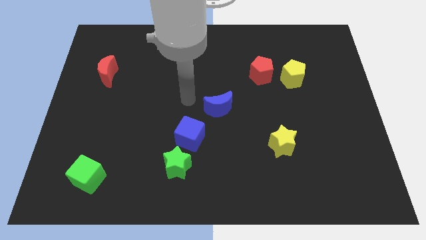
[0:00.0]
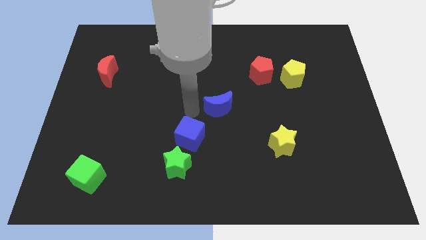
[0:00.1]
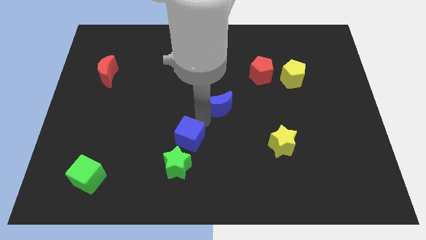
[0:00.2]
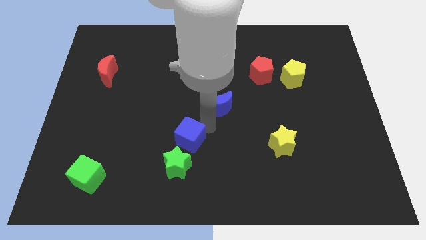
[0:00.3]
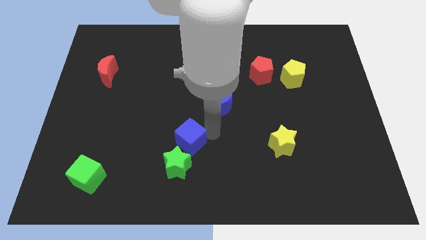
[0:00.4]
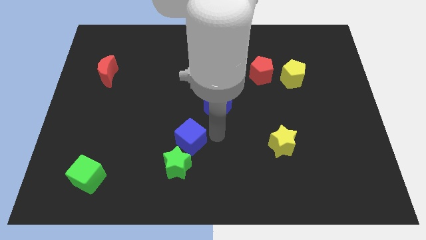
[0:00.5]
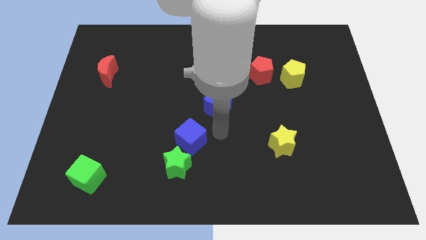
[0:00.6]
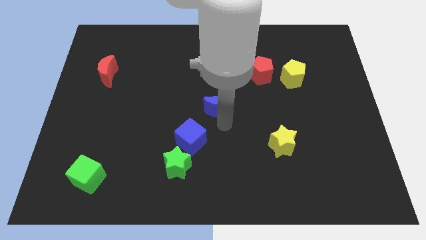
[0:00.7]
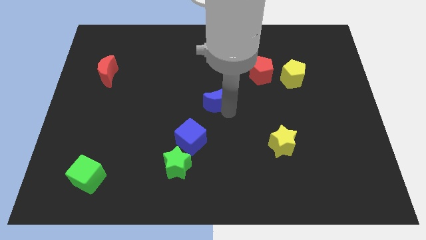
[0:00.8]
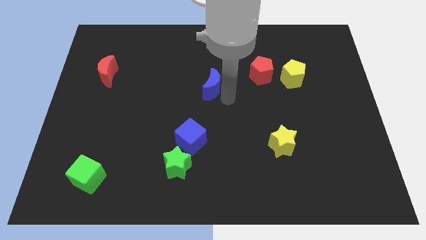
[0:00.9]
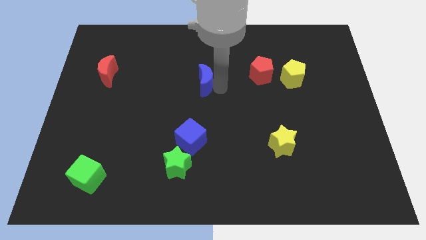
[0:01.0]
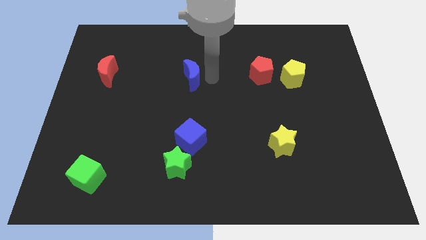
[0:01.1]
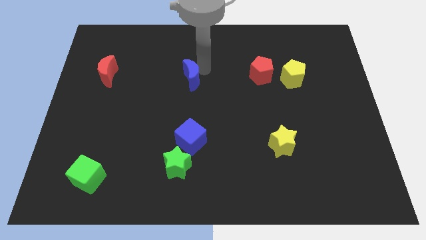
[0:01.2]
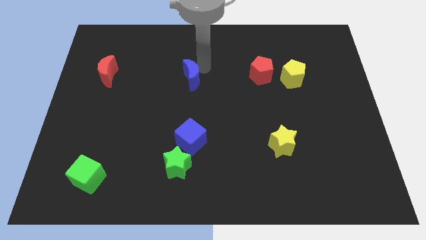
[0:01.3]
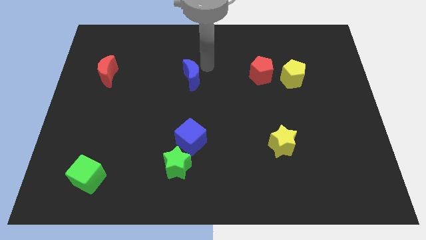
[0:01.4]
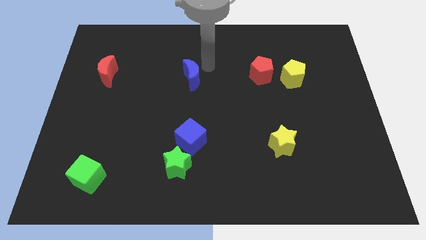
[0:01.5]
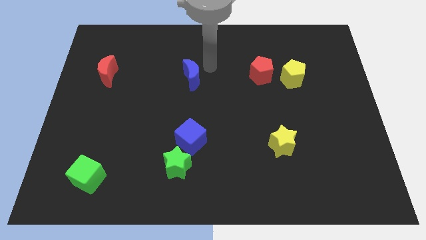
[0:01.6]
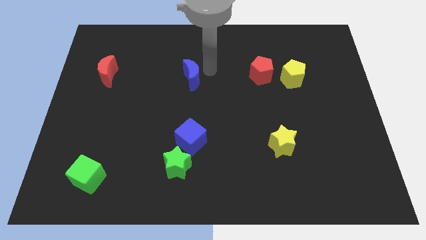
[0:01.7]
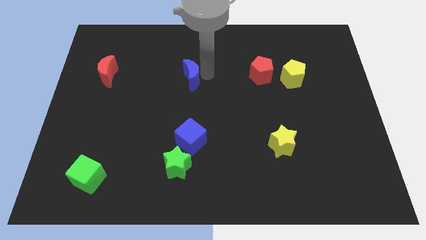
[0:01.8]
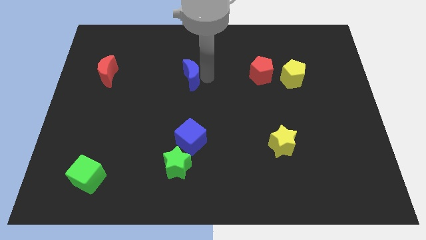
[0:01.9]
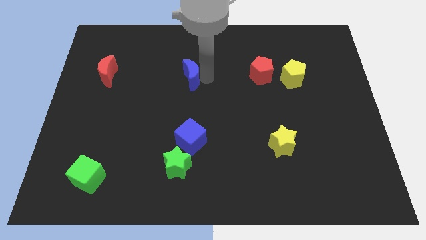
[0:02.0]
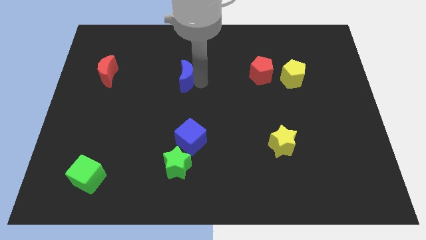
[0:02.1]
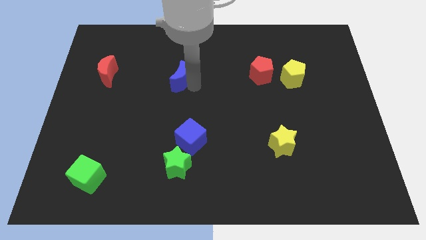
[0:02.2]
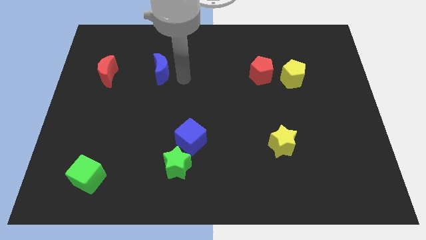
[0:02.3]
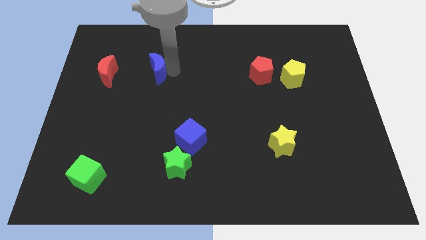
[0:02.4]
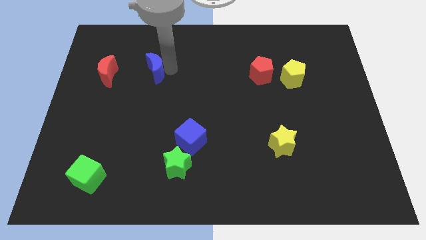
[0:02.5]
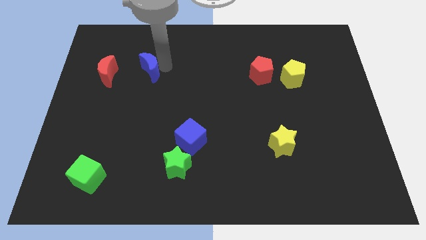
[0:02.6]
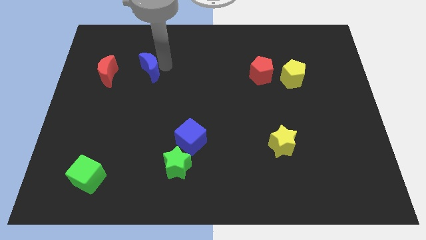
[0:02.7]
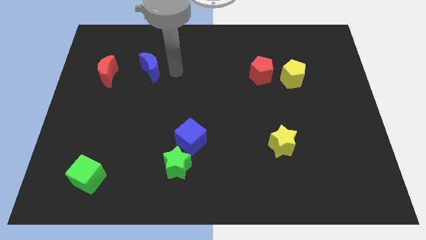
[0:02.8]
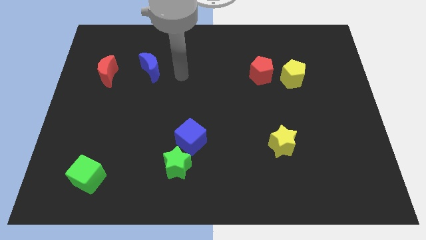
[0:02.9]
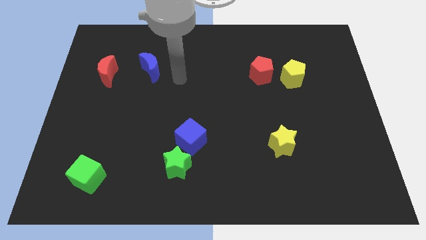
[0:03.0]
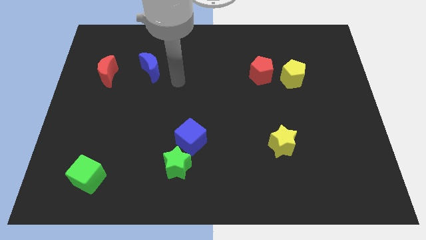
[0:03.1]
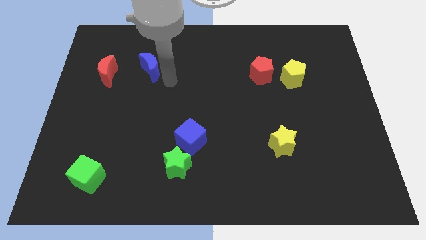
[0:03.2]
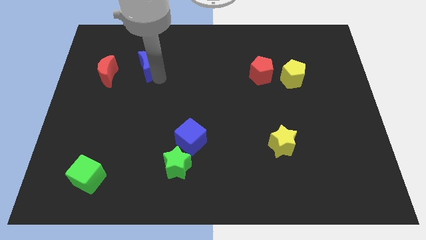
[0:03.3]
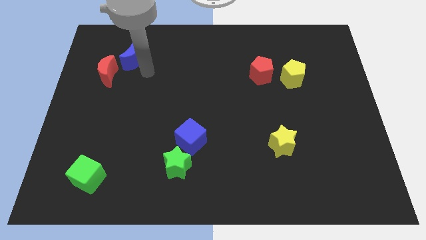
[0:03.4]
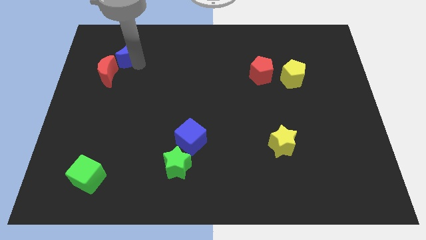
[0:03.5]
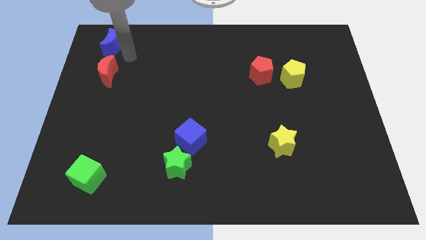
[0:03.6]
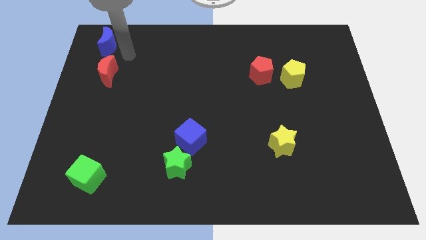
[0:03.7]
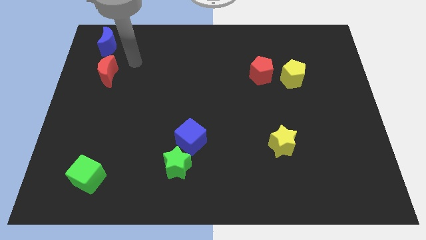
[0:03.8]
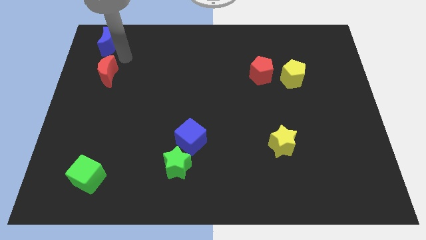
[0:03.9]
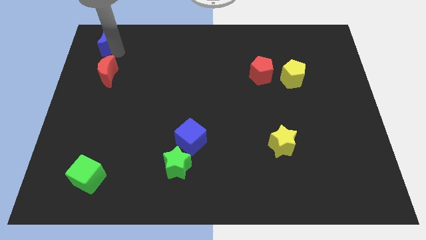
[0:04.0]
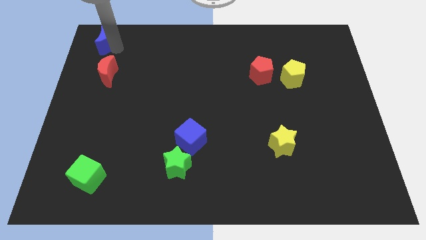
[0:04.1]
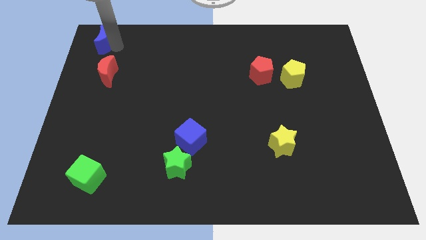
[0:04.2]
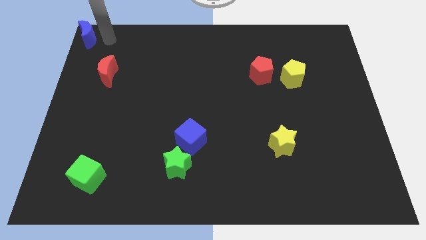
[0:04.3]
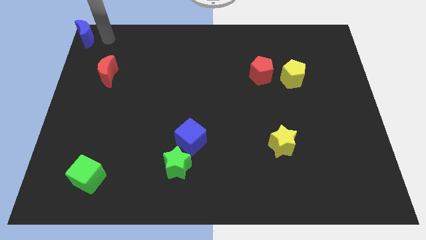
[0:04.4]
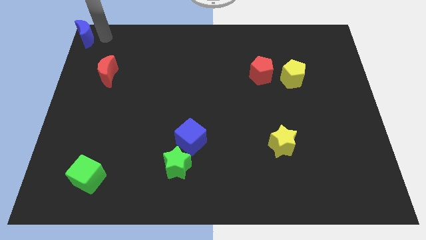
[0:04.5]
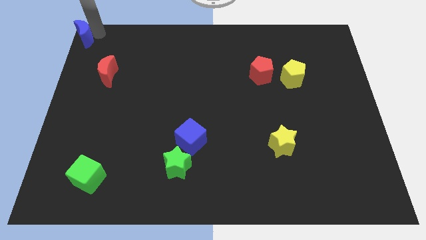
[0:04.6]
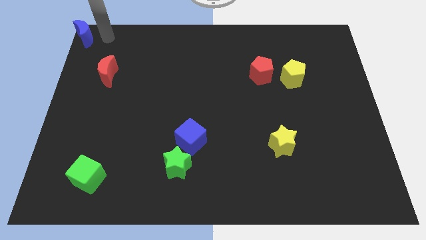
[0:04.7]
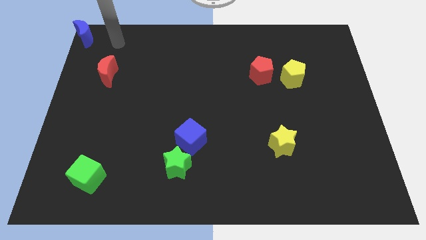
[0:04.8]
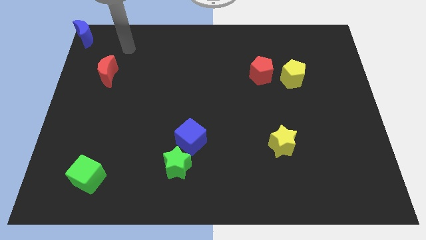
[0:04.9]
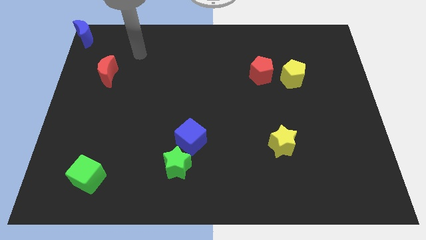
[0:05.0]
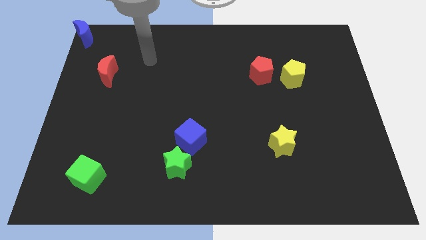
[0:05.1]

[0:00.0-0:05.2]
drag blue crescent towards top left corner of board

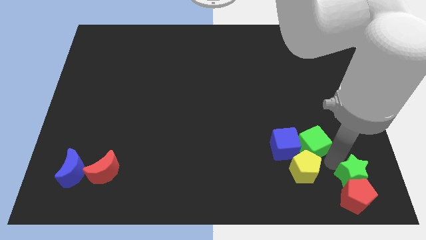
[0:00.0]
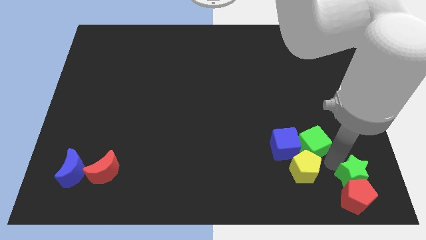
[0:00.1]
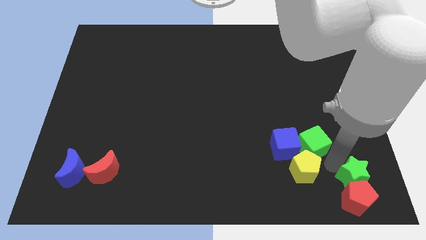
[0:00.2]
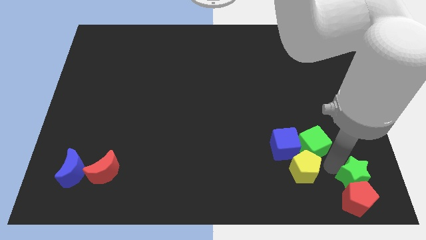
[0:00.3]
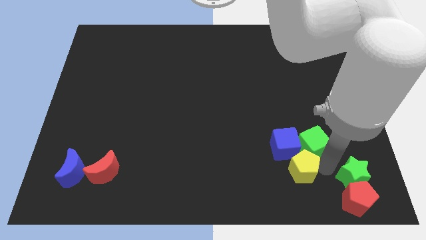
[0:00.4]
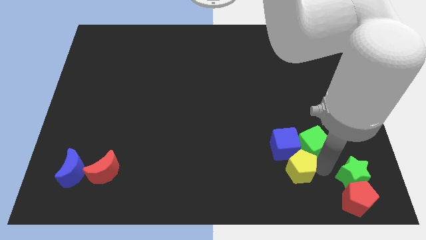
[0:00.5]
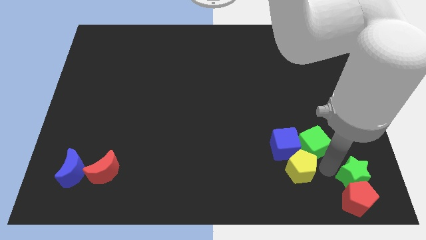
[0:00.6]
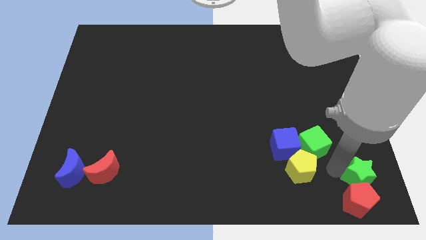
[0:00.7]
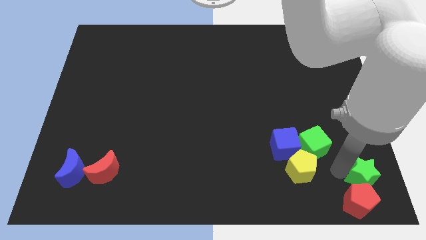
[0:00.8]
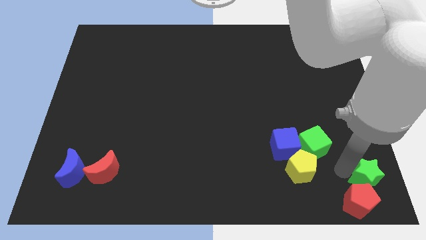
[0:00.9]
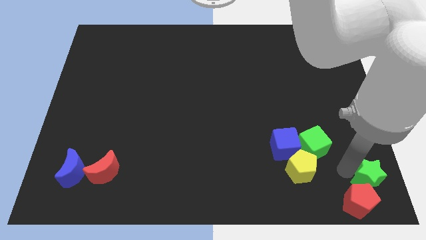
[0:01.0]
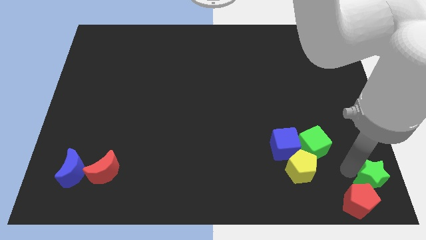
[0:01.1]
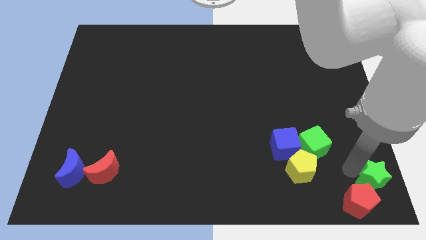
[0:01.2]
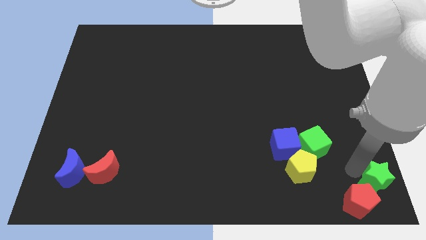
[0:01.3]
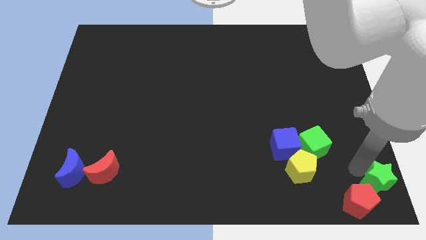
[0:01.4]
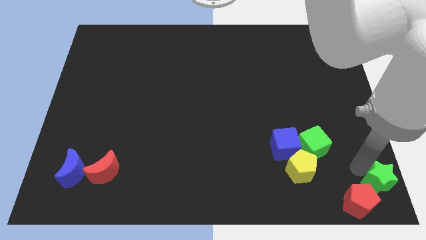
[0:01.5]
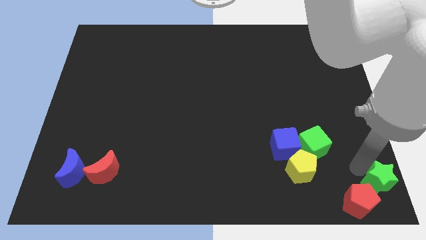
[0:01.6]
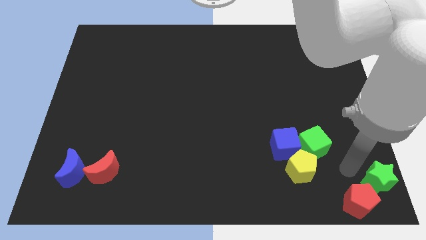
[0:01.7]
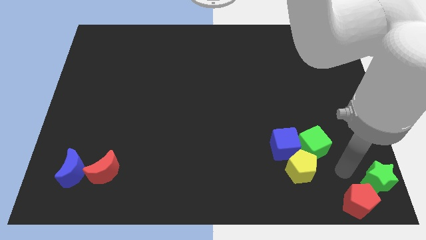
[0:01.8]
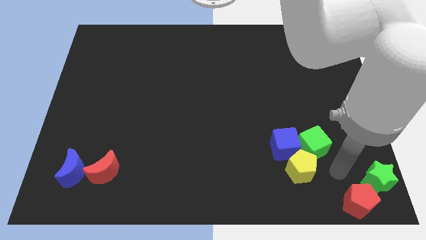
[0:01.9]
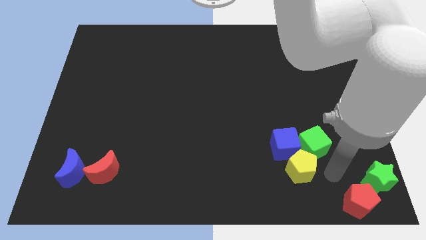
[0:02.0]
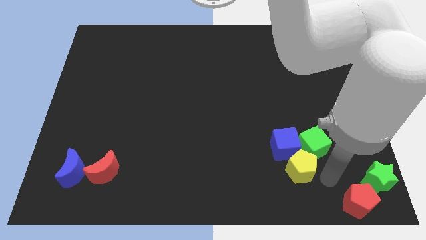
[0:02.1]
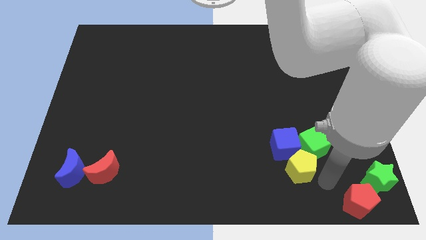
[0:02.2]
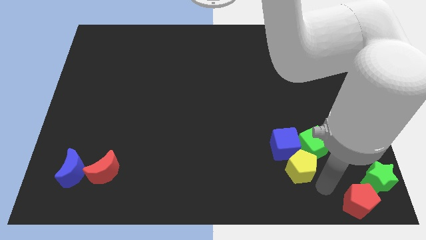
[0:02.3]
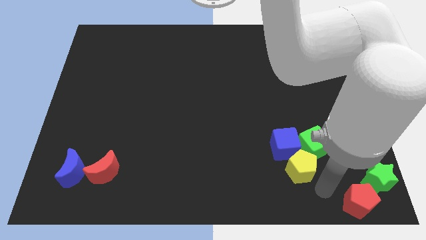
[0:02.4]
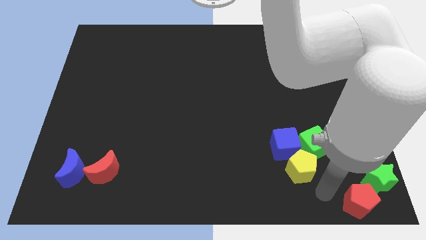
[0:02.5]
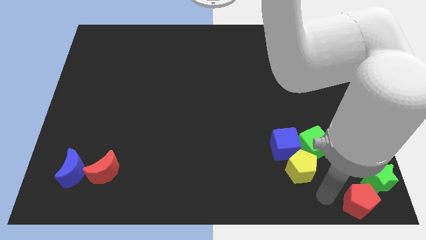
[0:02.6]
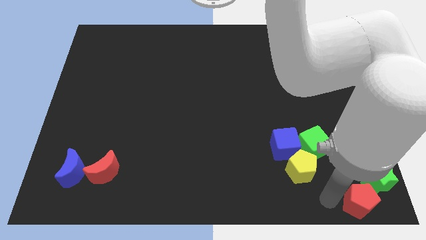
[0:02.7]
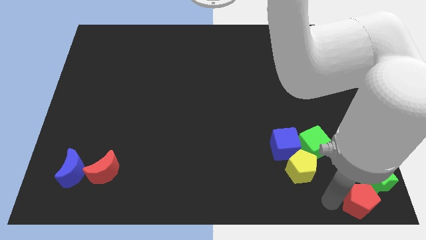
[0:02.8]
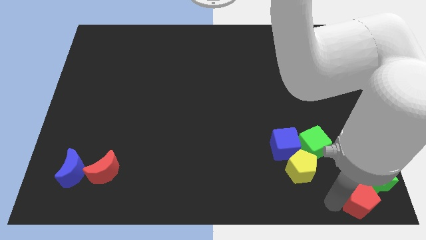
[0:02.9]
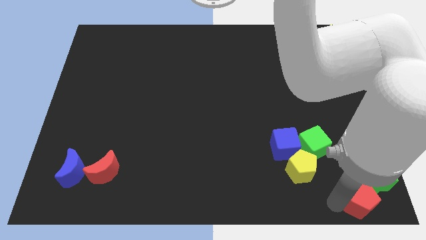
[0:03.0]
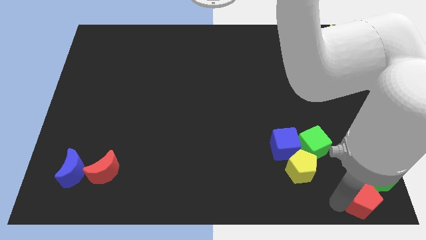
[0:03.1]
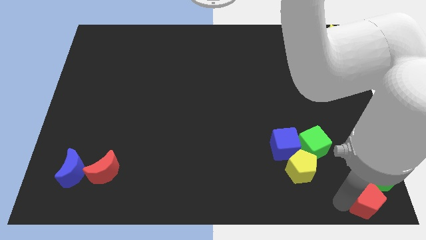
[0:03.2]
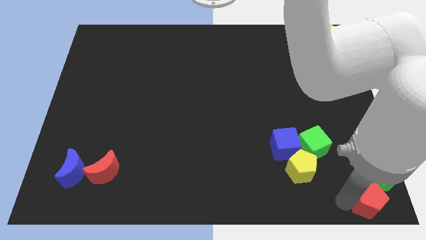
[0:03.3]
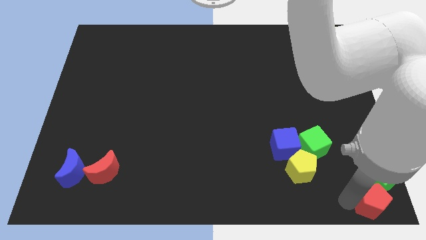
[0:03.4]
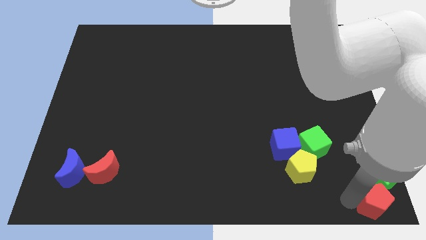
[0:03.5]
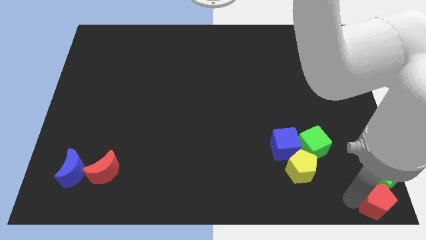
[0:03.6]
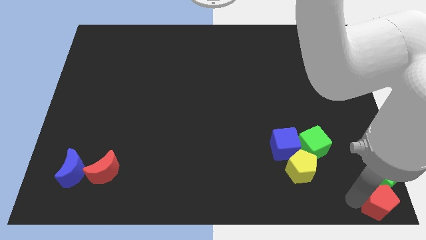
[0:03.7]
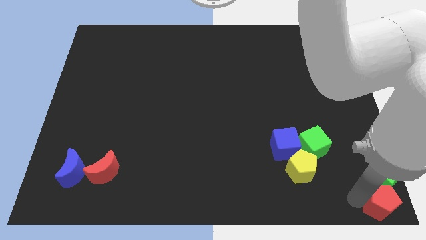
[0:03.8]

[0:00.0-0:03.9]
push the green star with red pentagon to the bottom right corner
